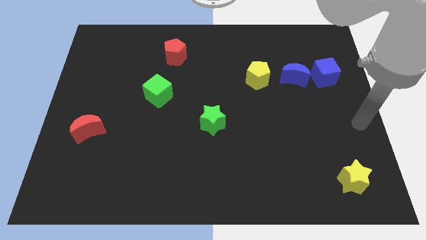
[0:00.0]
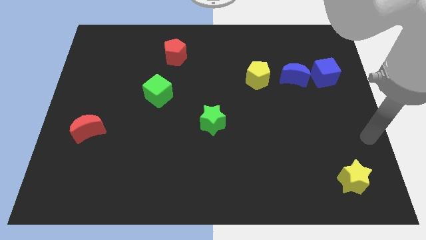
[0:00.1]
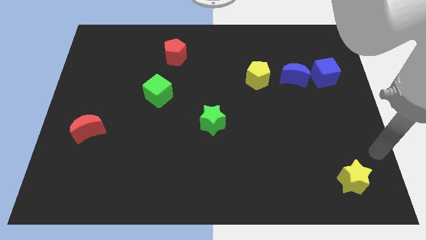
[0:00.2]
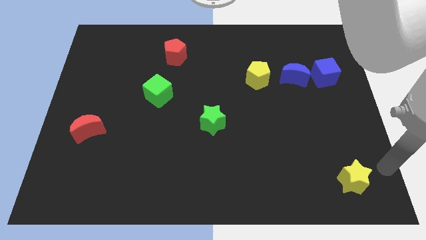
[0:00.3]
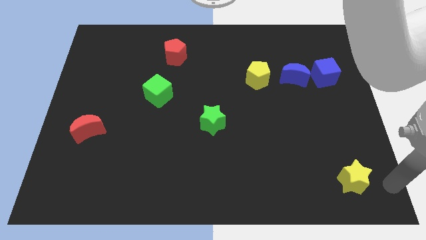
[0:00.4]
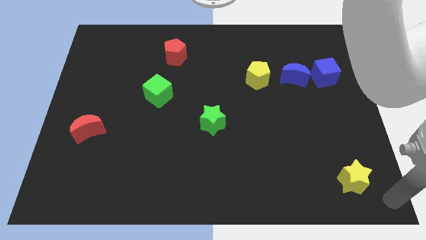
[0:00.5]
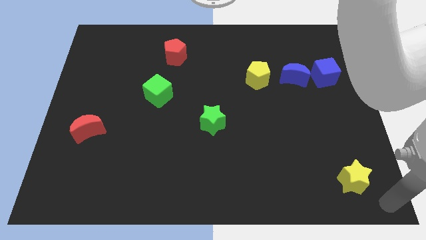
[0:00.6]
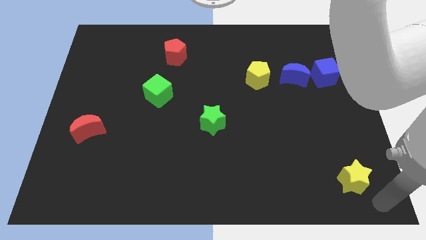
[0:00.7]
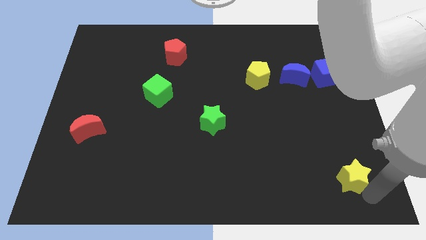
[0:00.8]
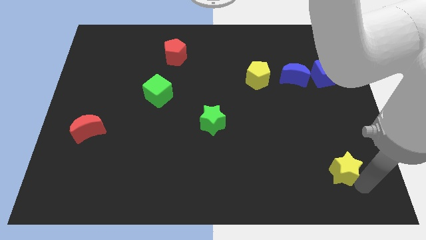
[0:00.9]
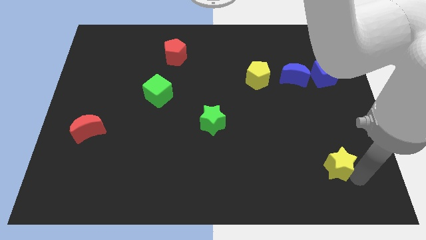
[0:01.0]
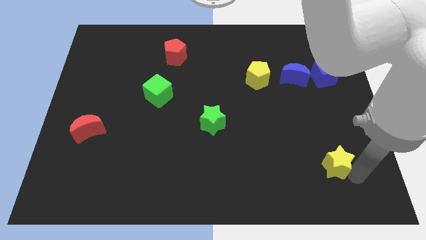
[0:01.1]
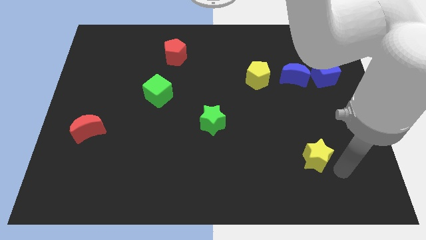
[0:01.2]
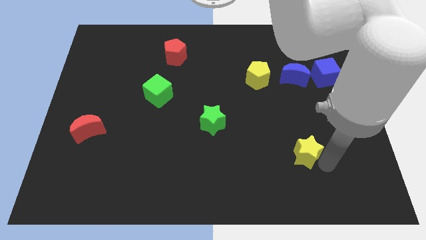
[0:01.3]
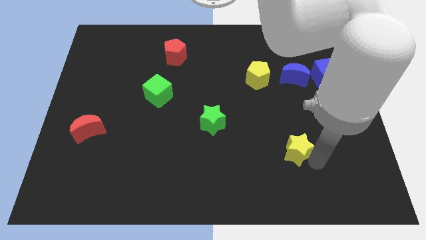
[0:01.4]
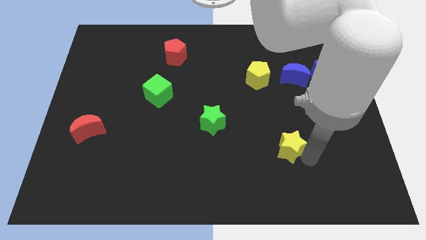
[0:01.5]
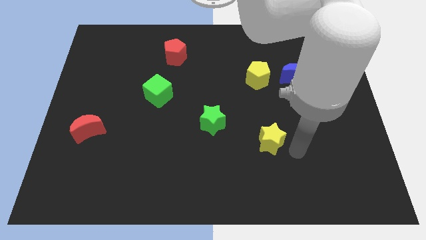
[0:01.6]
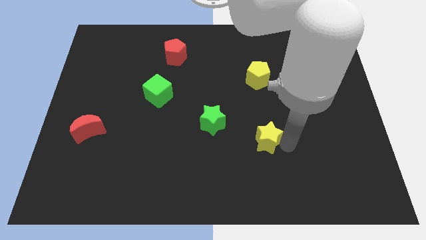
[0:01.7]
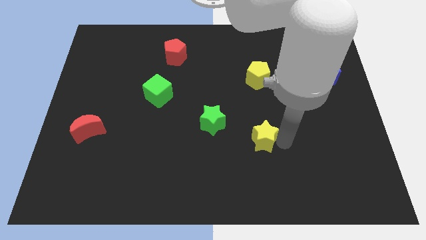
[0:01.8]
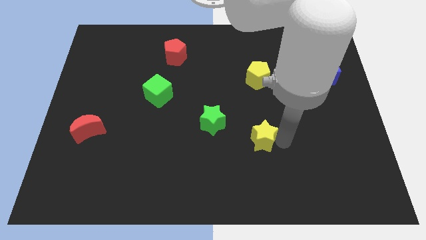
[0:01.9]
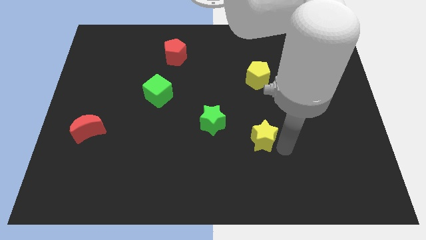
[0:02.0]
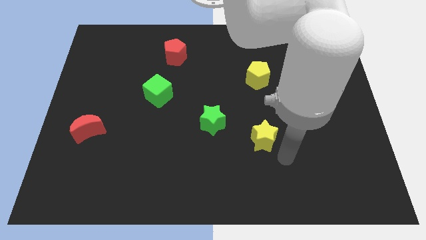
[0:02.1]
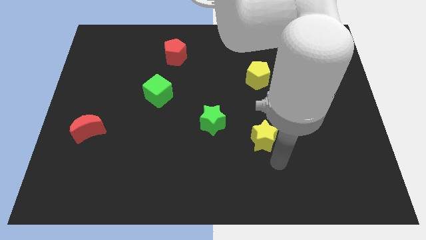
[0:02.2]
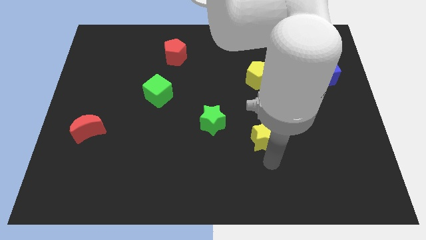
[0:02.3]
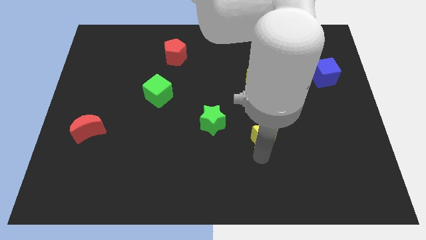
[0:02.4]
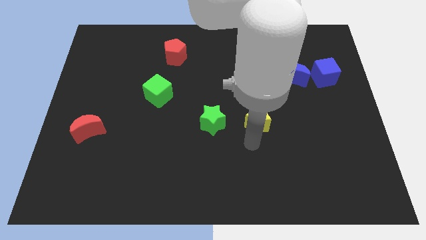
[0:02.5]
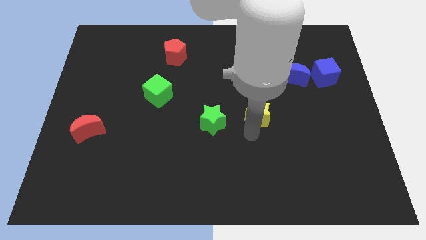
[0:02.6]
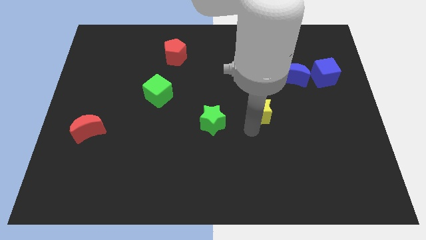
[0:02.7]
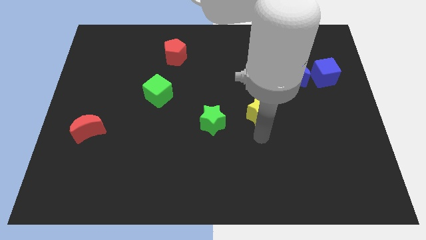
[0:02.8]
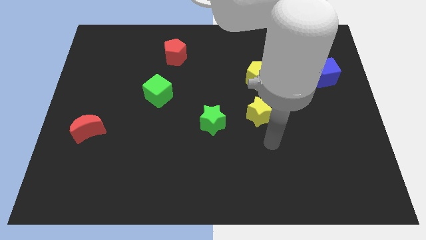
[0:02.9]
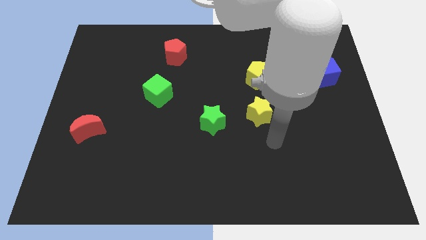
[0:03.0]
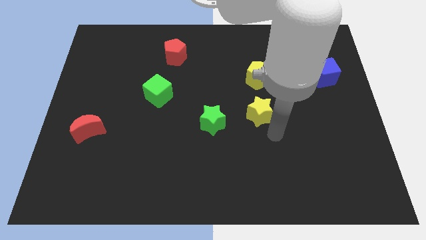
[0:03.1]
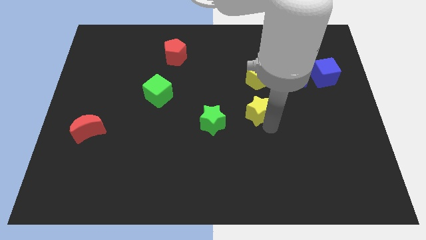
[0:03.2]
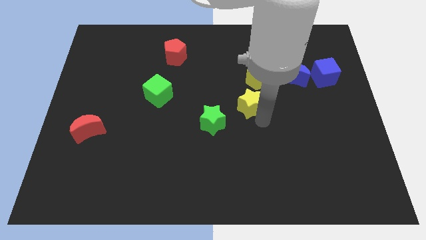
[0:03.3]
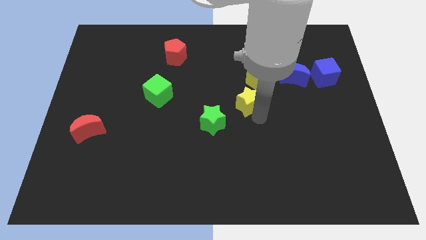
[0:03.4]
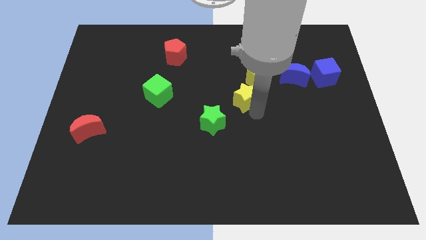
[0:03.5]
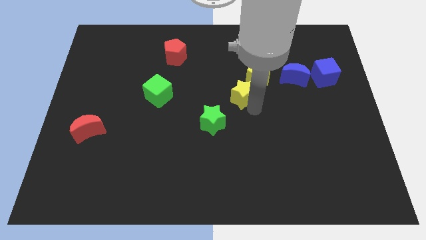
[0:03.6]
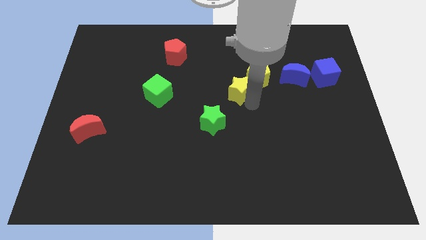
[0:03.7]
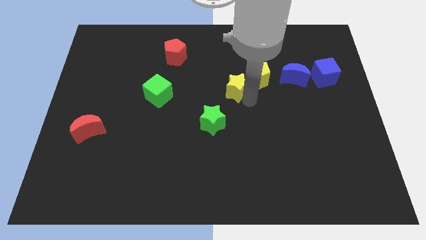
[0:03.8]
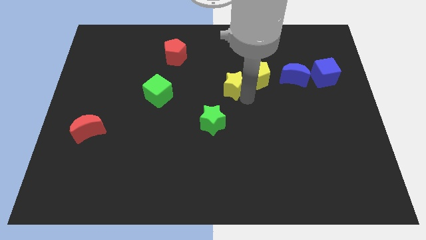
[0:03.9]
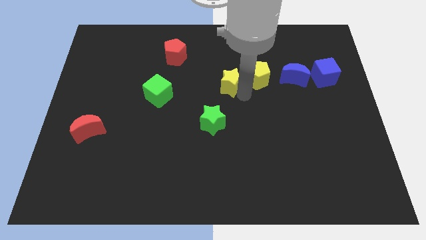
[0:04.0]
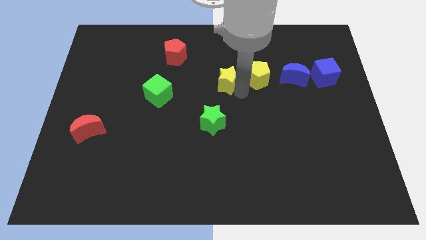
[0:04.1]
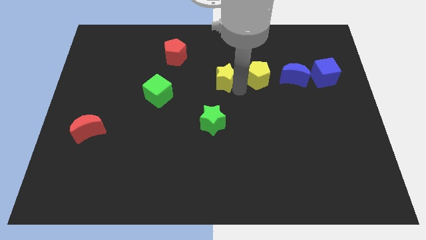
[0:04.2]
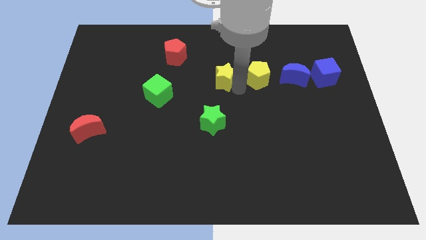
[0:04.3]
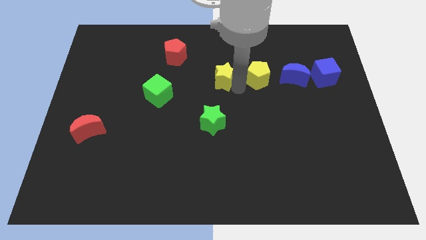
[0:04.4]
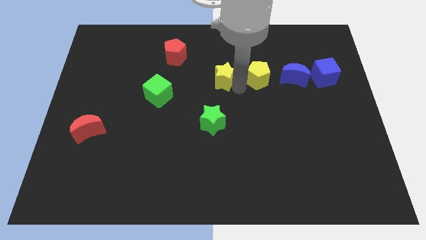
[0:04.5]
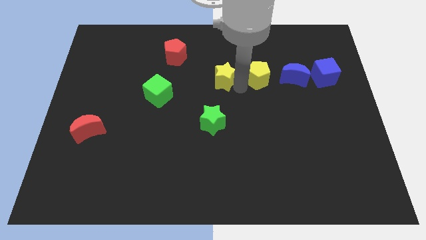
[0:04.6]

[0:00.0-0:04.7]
place yellow star beside yellow pentagon

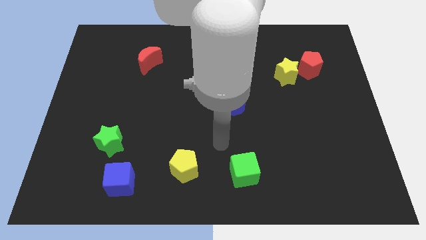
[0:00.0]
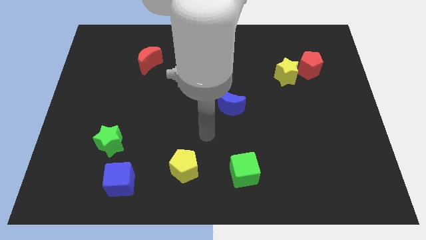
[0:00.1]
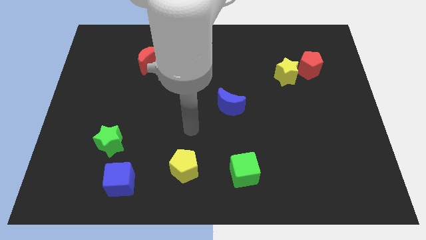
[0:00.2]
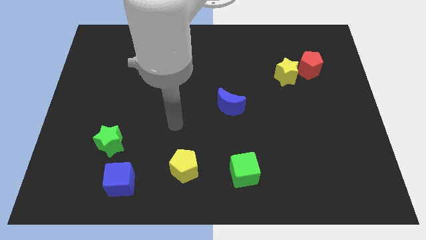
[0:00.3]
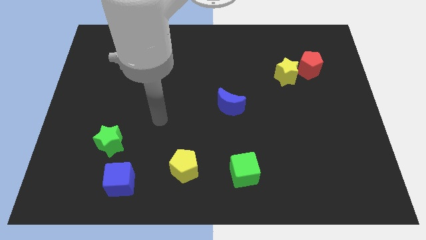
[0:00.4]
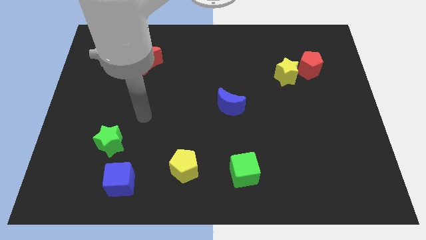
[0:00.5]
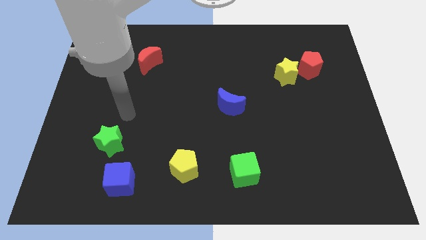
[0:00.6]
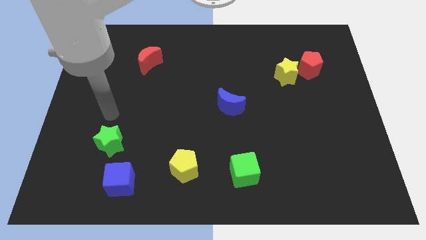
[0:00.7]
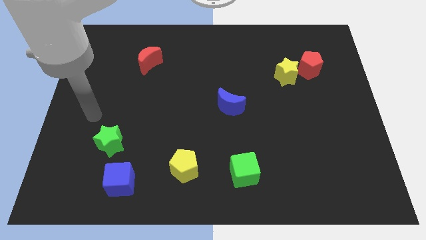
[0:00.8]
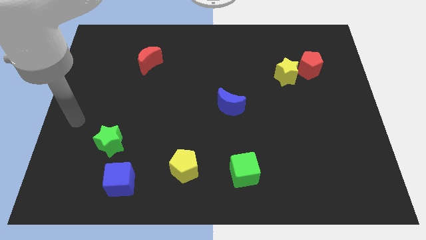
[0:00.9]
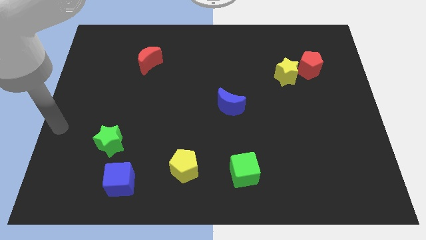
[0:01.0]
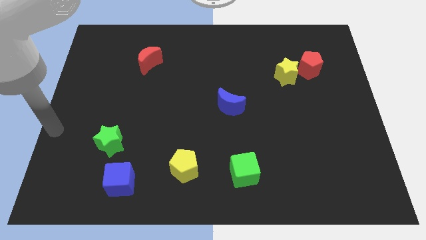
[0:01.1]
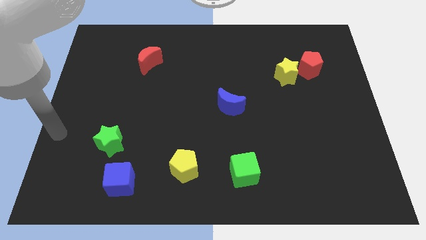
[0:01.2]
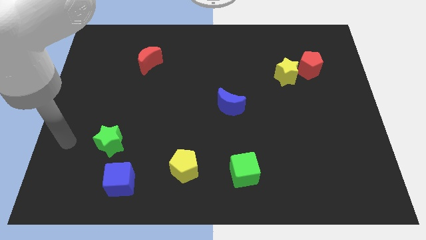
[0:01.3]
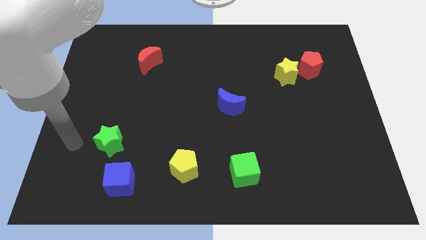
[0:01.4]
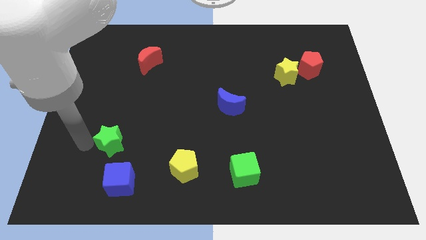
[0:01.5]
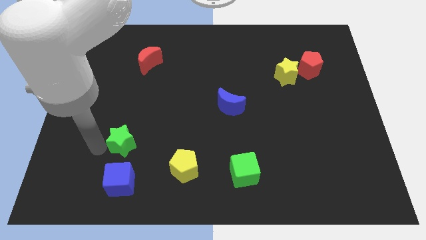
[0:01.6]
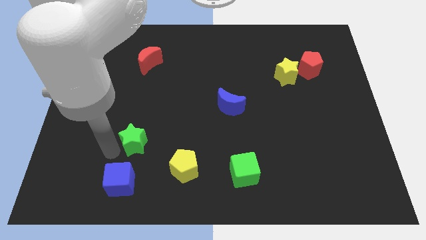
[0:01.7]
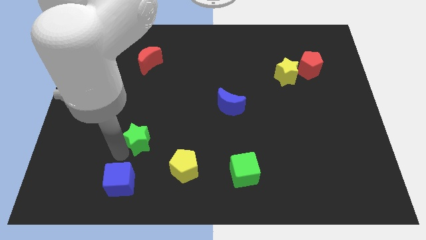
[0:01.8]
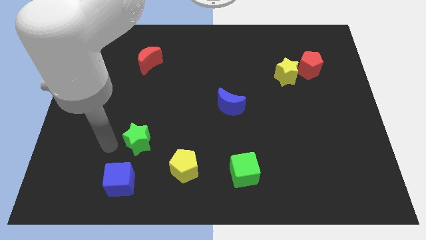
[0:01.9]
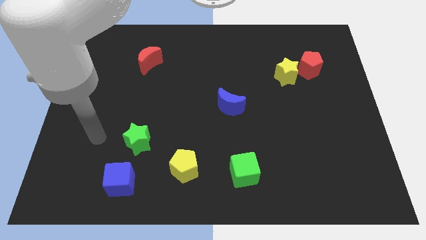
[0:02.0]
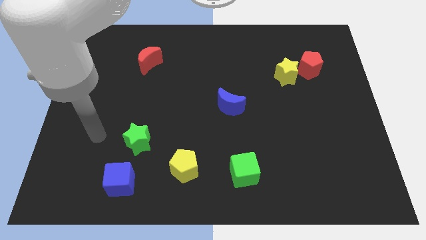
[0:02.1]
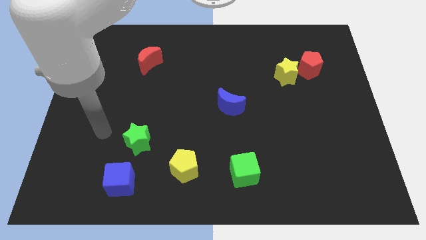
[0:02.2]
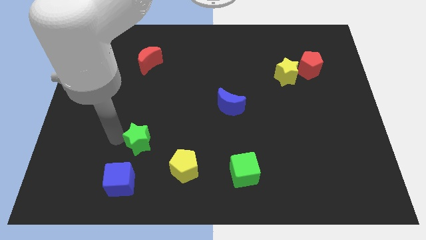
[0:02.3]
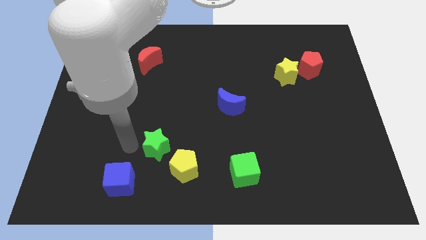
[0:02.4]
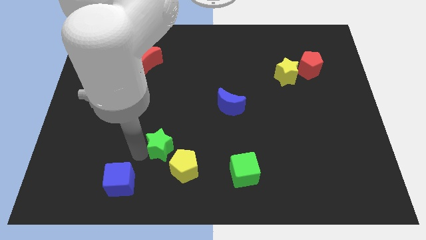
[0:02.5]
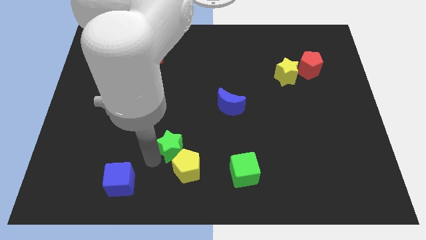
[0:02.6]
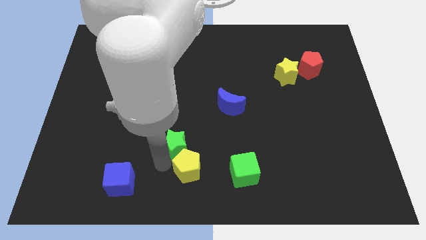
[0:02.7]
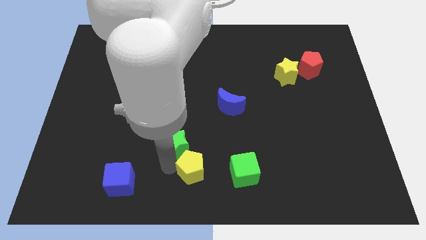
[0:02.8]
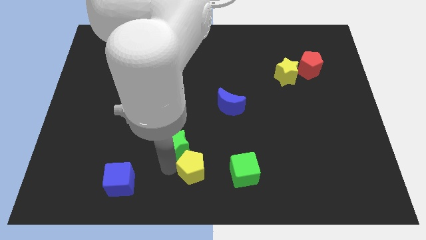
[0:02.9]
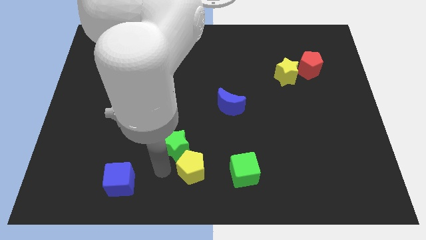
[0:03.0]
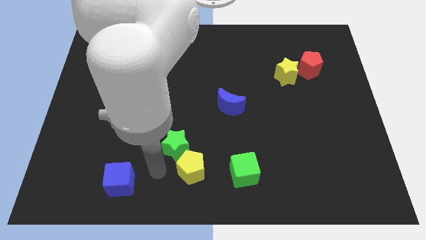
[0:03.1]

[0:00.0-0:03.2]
move the green star to the top left side of the yellow pentagon

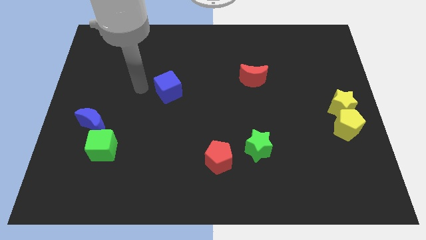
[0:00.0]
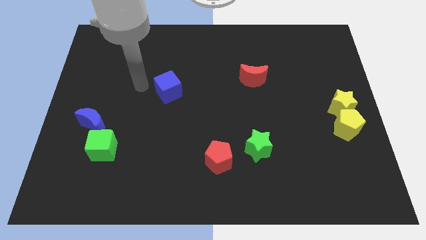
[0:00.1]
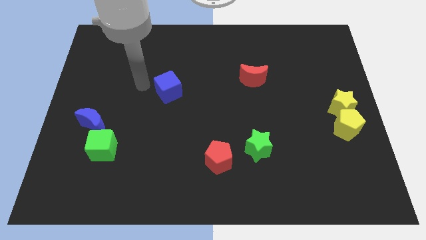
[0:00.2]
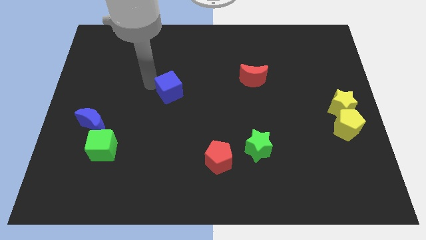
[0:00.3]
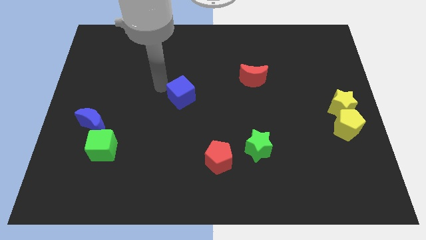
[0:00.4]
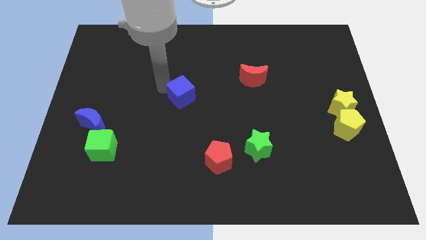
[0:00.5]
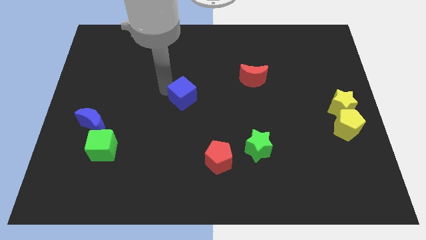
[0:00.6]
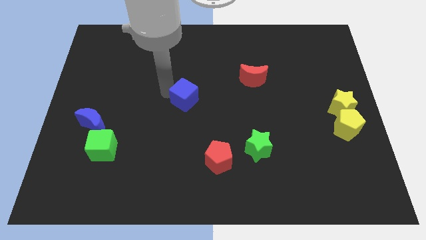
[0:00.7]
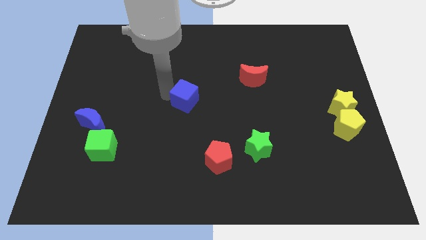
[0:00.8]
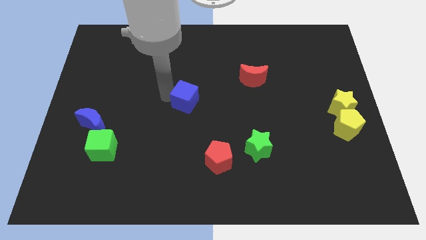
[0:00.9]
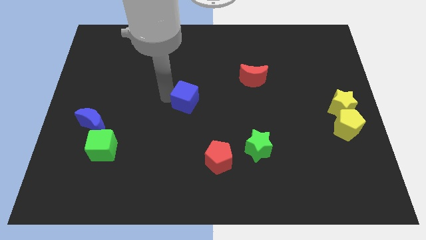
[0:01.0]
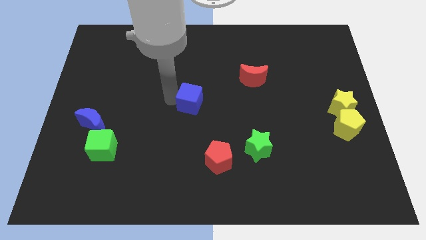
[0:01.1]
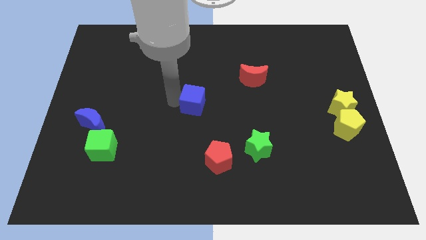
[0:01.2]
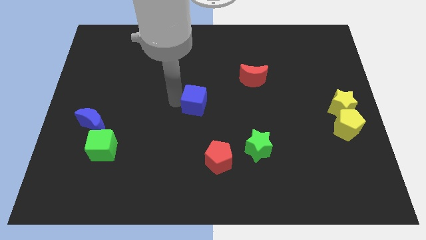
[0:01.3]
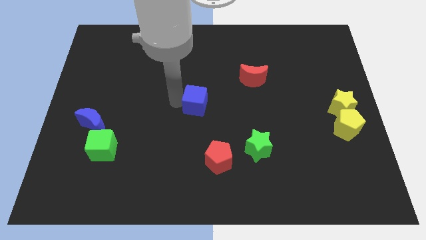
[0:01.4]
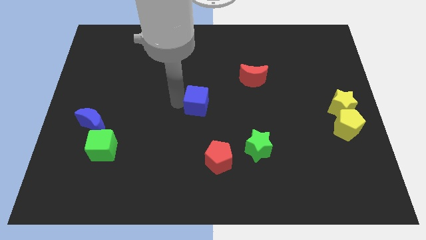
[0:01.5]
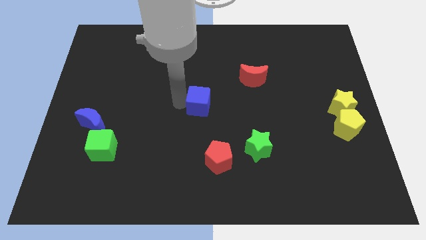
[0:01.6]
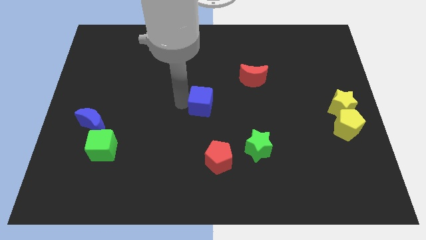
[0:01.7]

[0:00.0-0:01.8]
push the blue cube towards the center of the board
